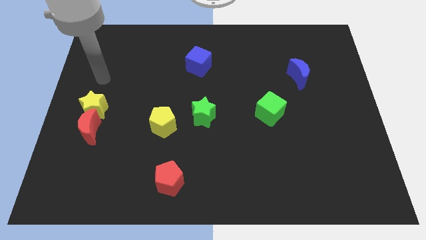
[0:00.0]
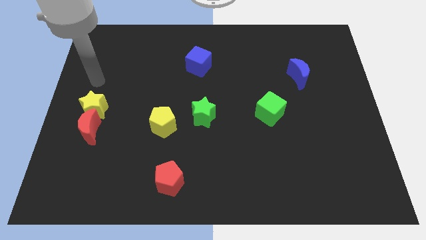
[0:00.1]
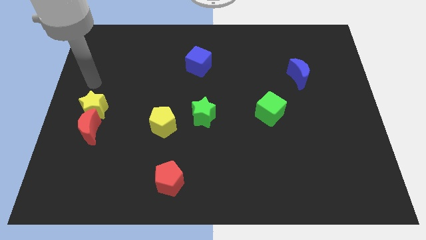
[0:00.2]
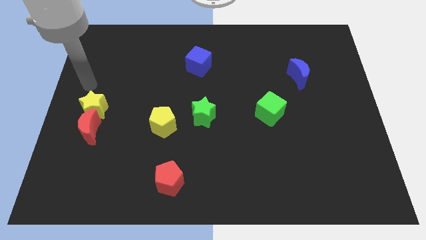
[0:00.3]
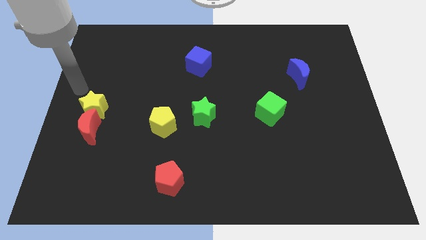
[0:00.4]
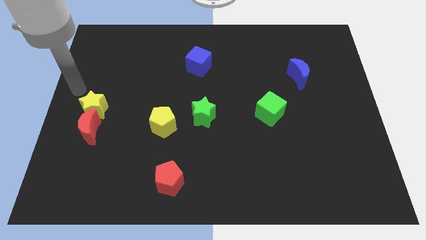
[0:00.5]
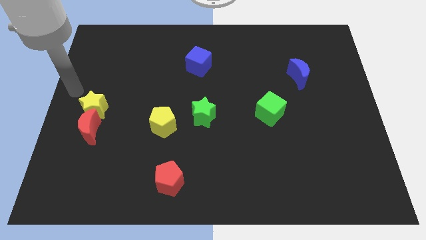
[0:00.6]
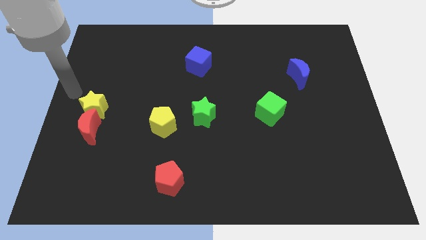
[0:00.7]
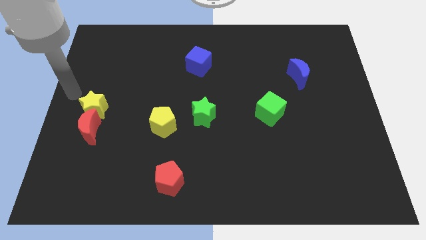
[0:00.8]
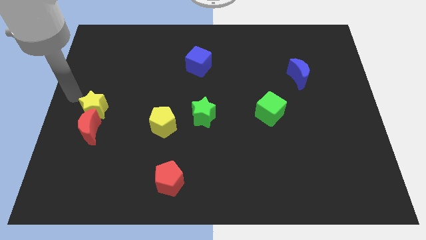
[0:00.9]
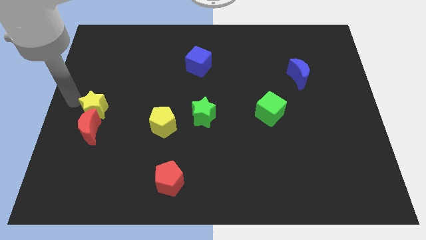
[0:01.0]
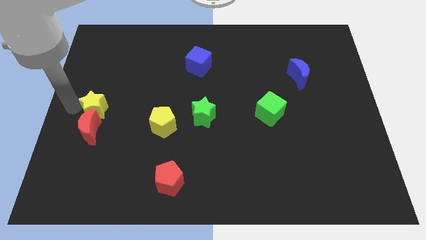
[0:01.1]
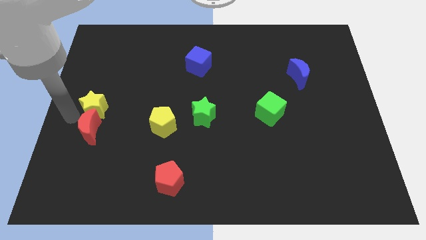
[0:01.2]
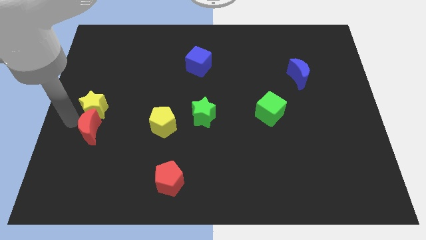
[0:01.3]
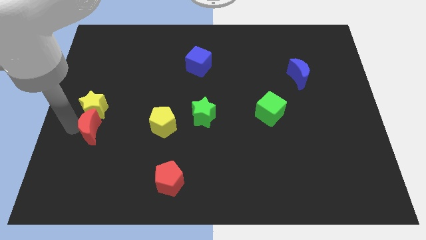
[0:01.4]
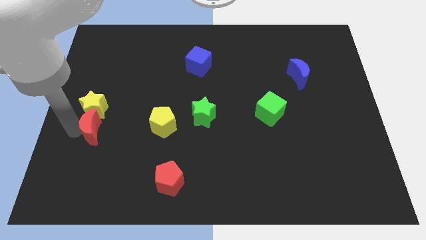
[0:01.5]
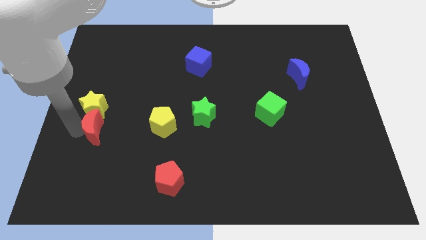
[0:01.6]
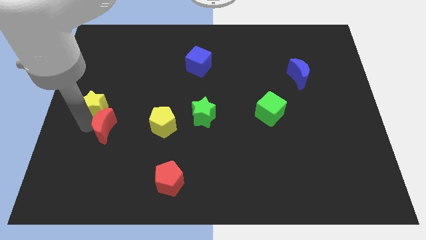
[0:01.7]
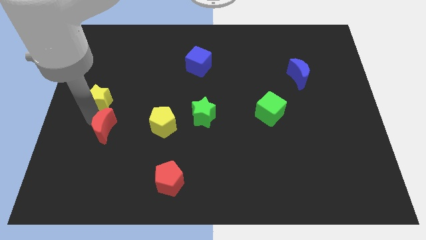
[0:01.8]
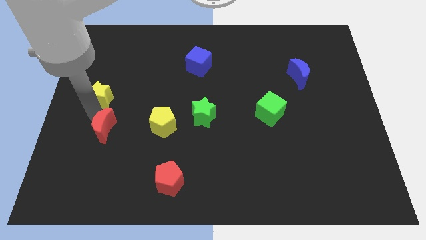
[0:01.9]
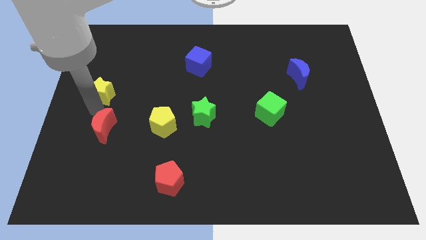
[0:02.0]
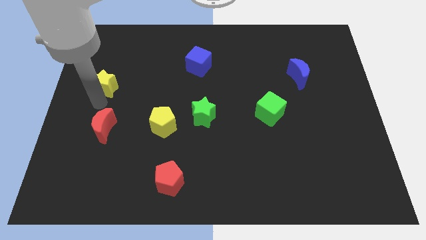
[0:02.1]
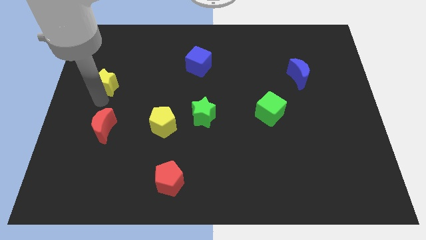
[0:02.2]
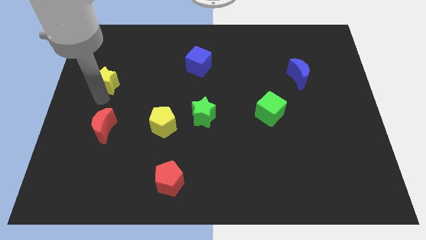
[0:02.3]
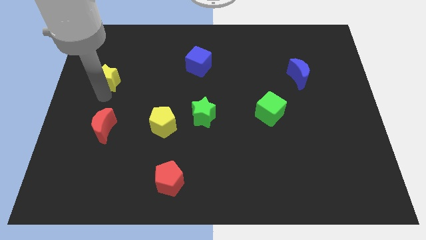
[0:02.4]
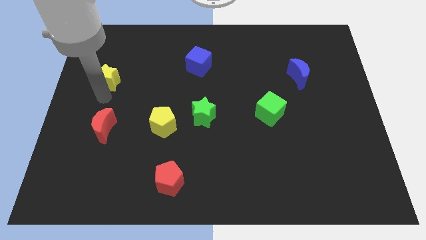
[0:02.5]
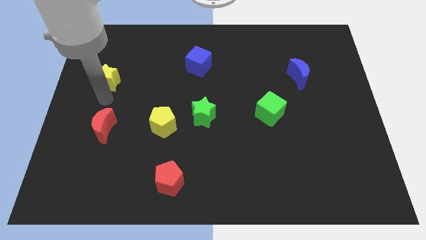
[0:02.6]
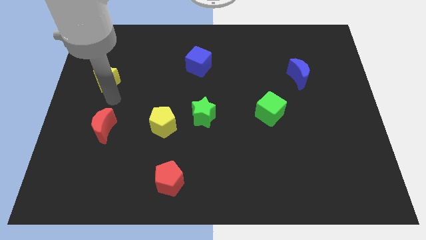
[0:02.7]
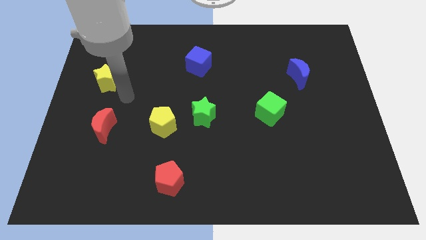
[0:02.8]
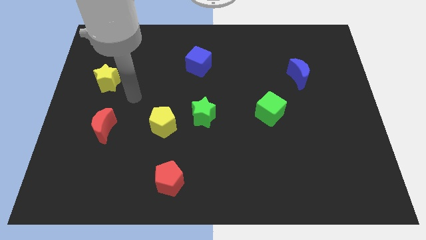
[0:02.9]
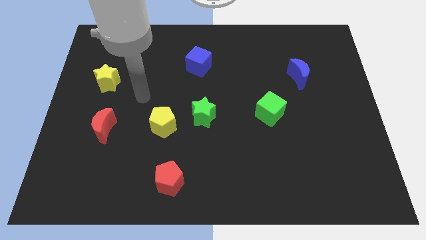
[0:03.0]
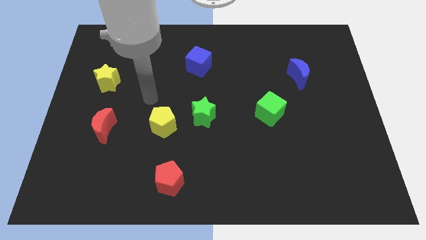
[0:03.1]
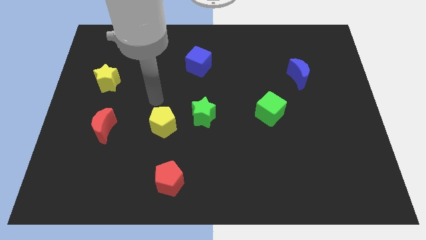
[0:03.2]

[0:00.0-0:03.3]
push the yellow star upward

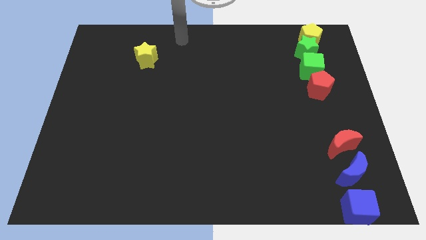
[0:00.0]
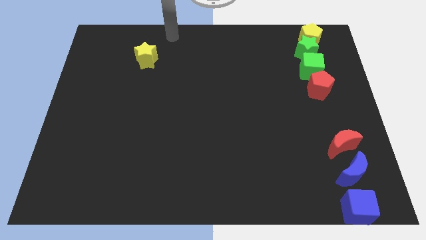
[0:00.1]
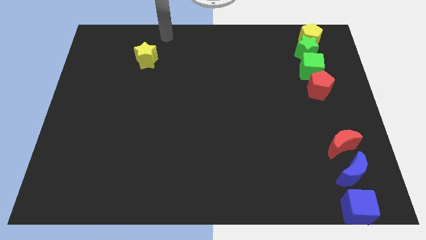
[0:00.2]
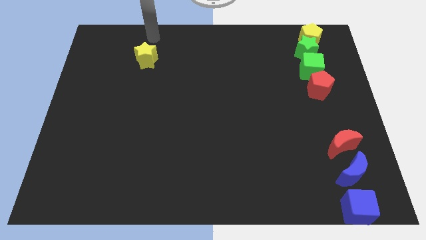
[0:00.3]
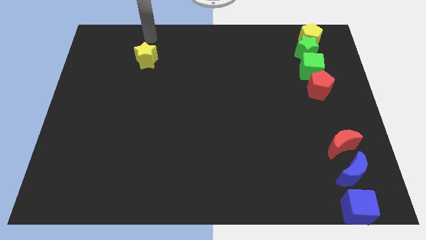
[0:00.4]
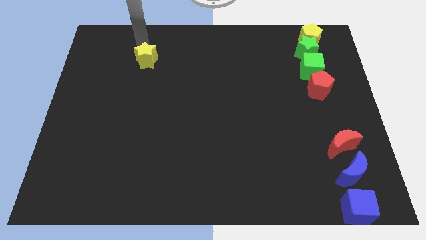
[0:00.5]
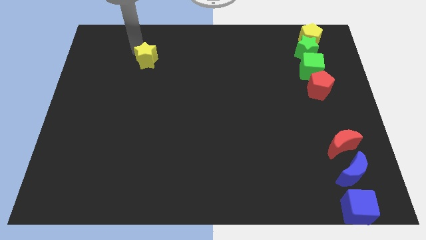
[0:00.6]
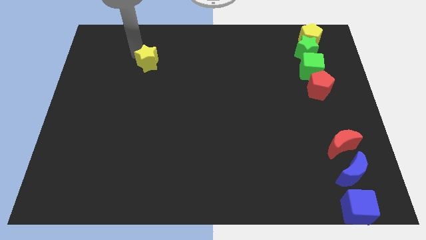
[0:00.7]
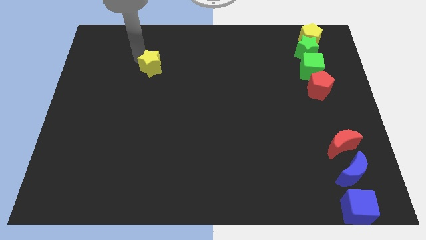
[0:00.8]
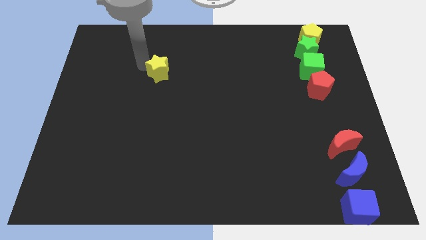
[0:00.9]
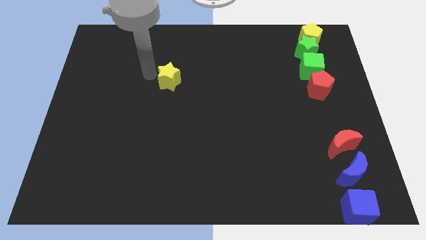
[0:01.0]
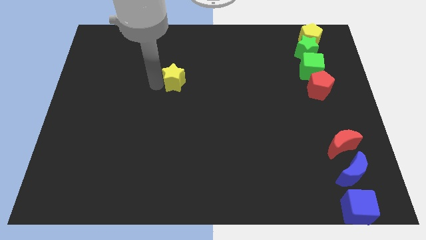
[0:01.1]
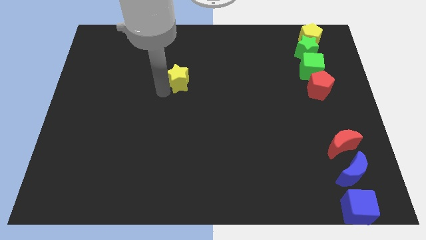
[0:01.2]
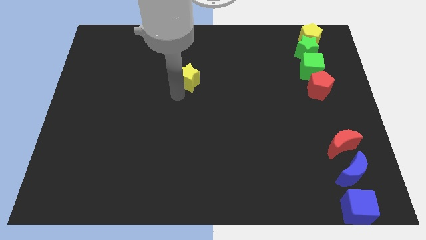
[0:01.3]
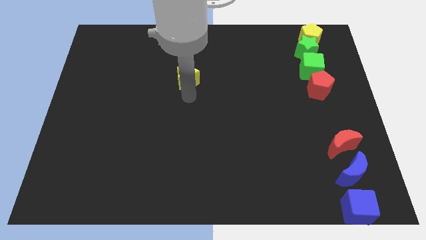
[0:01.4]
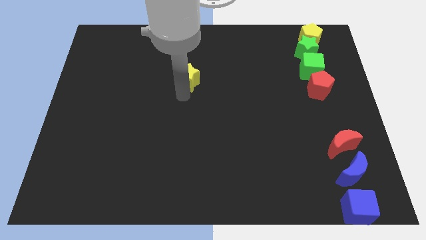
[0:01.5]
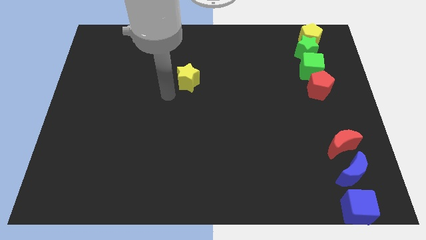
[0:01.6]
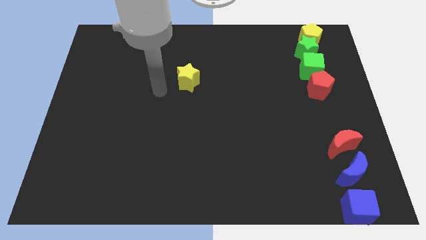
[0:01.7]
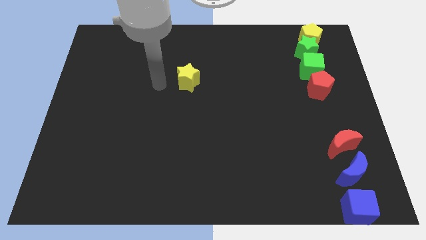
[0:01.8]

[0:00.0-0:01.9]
slide the yellow star towards the center of the board

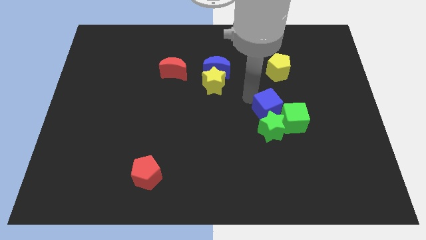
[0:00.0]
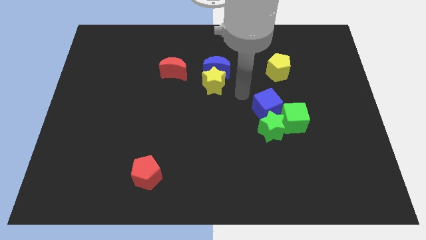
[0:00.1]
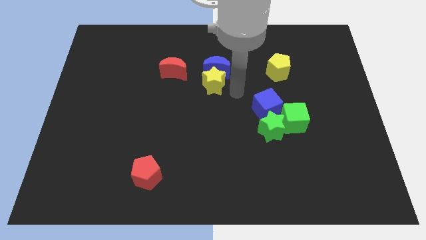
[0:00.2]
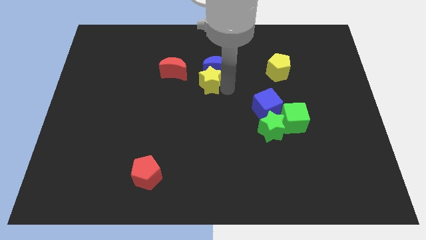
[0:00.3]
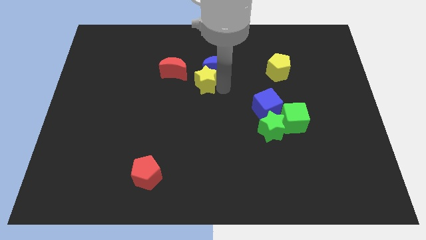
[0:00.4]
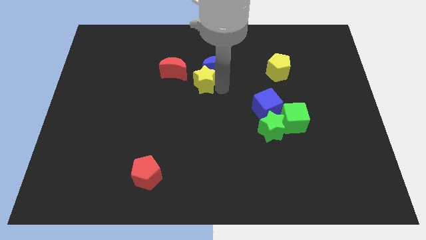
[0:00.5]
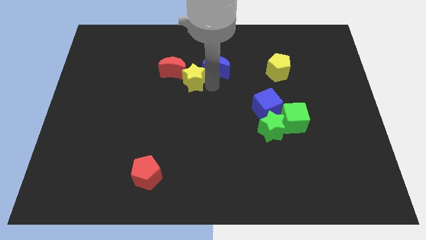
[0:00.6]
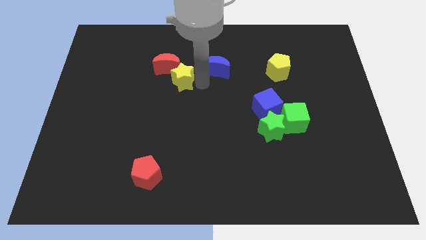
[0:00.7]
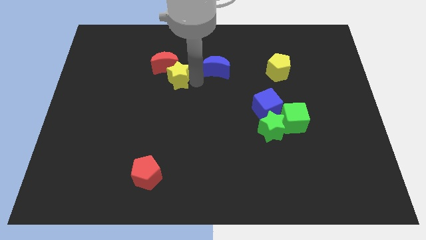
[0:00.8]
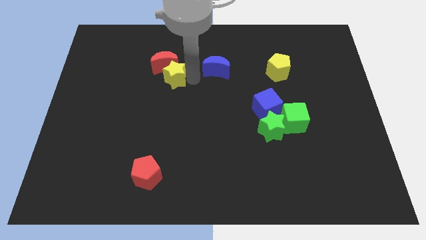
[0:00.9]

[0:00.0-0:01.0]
move the yellow star close to the red crescent

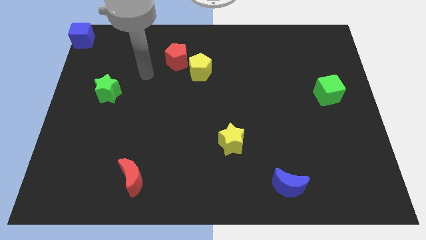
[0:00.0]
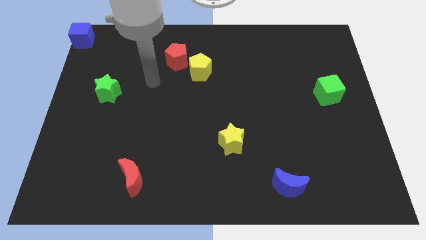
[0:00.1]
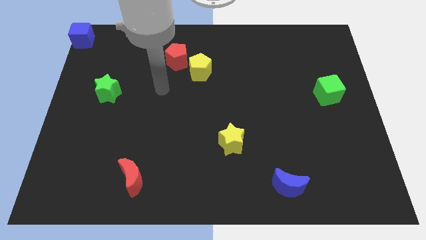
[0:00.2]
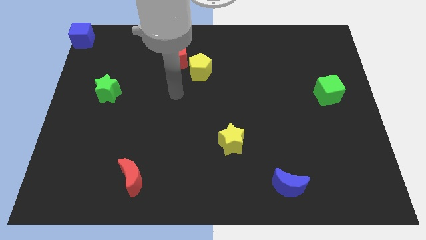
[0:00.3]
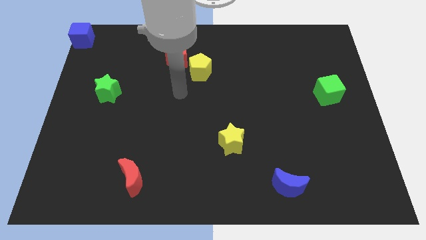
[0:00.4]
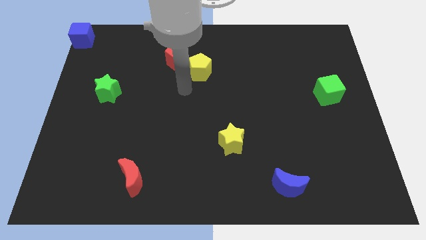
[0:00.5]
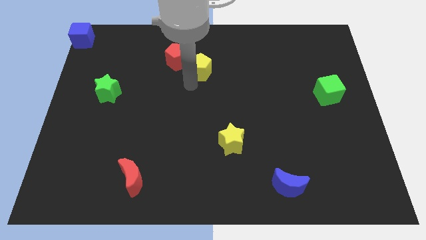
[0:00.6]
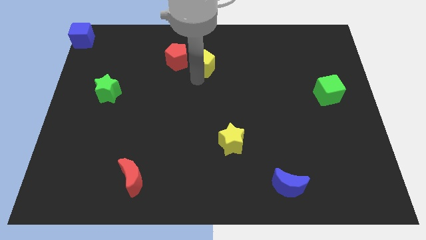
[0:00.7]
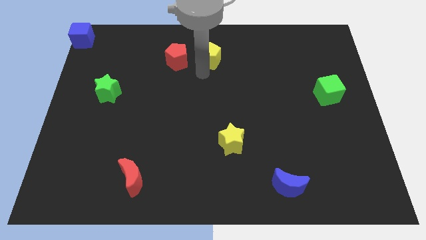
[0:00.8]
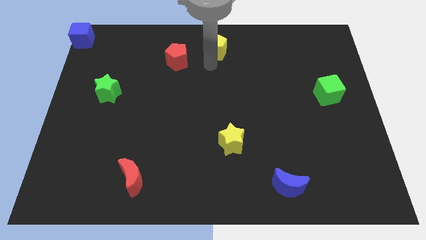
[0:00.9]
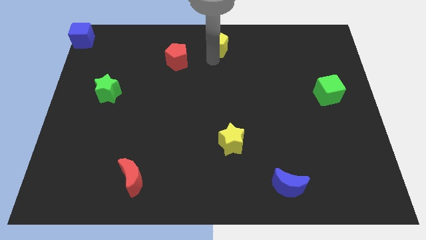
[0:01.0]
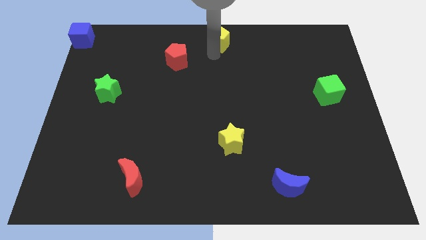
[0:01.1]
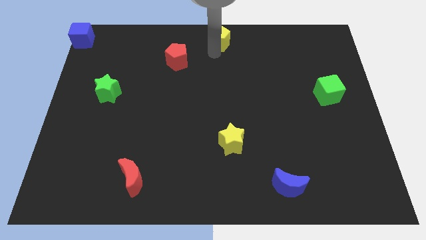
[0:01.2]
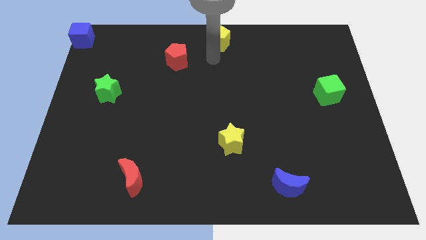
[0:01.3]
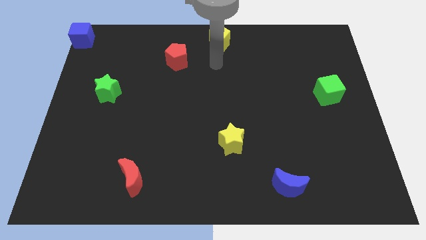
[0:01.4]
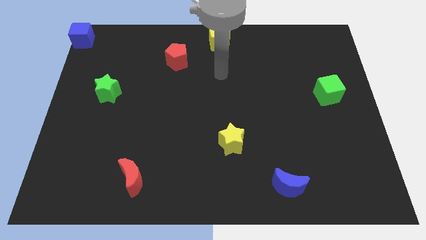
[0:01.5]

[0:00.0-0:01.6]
separate yellow pentagon from red pentagon

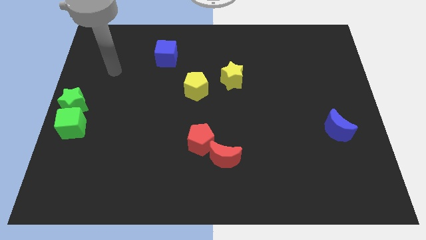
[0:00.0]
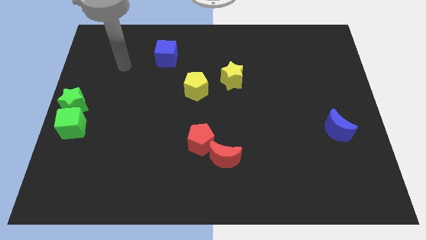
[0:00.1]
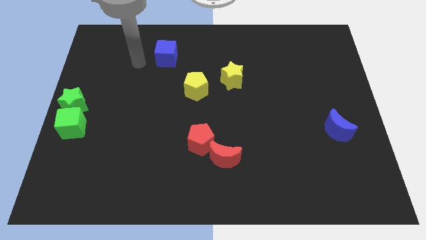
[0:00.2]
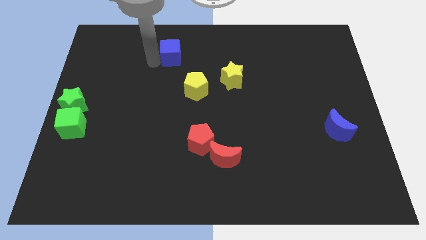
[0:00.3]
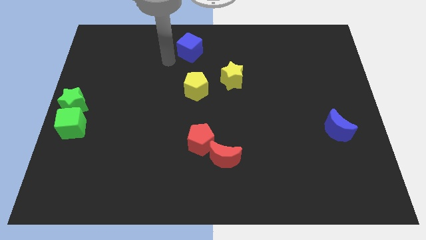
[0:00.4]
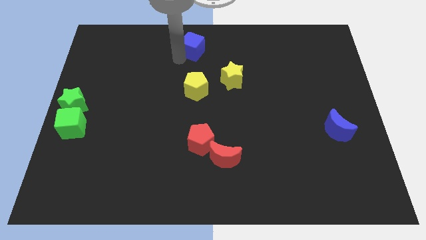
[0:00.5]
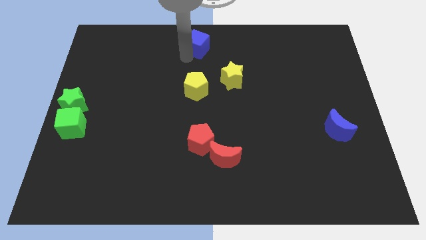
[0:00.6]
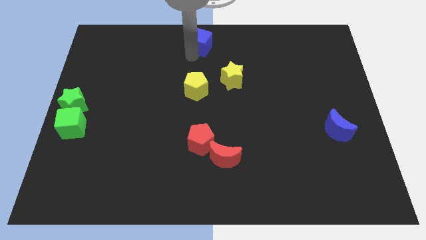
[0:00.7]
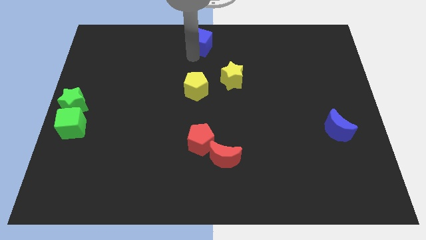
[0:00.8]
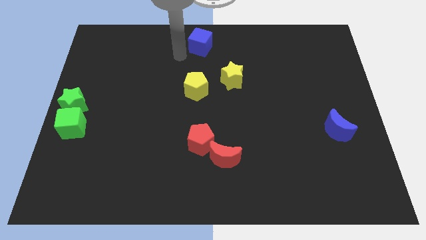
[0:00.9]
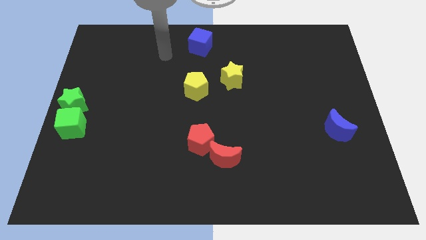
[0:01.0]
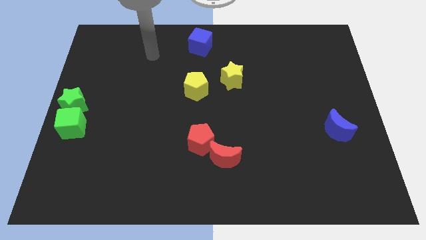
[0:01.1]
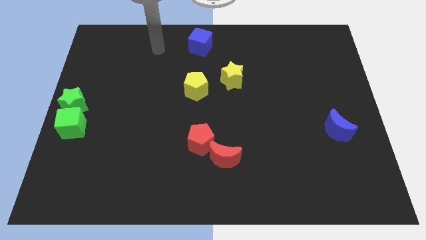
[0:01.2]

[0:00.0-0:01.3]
slightly push blue cube to the top center
